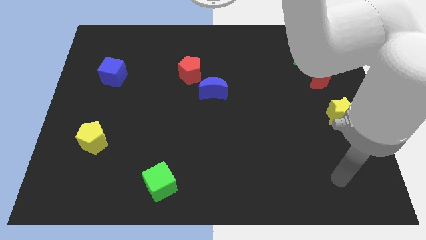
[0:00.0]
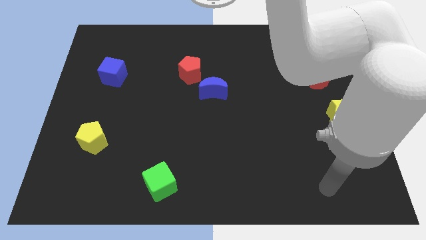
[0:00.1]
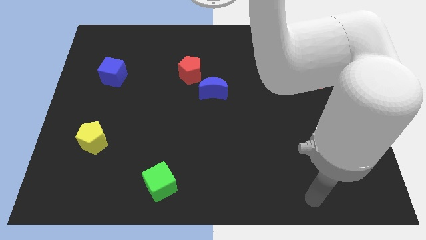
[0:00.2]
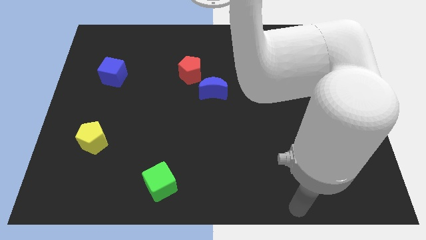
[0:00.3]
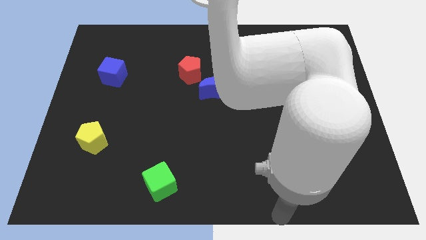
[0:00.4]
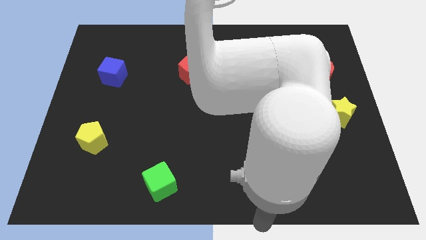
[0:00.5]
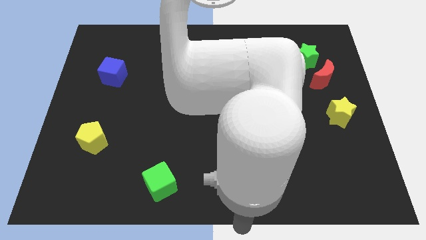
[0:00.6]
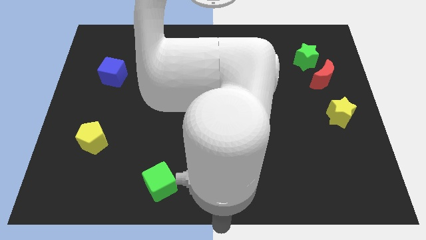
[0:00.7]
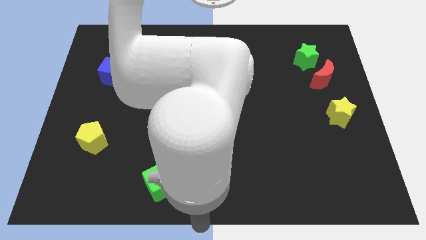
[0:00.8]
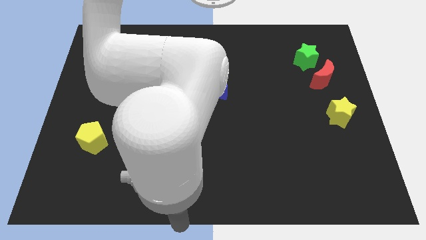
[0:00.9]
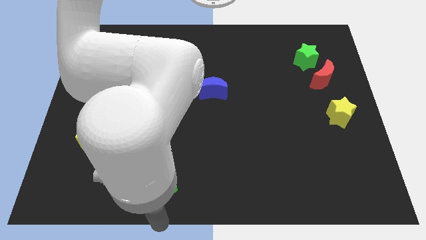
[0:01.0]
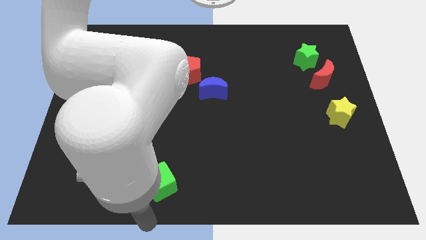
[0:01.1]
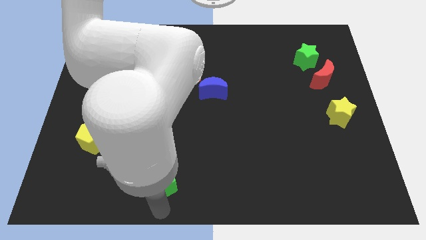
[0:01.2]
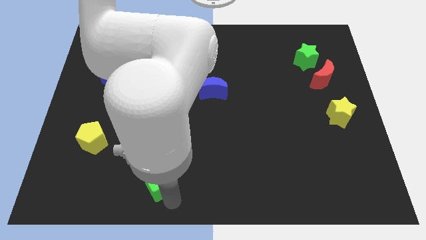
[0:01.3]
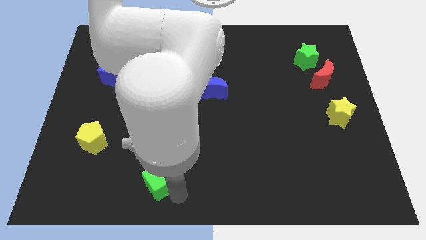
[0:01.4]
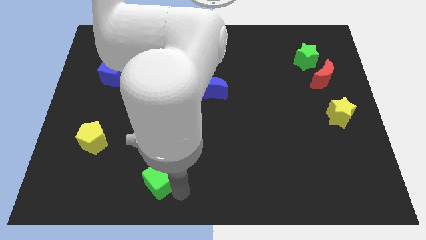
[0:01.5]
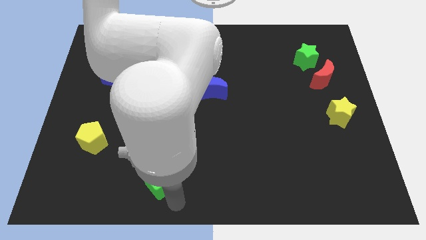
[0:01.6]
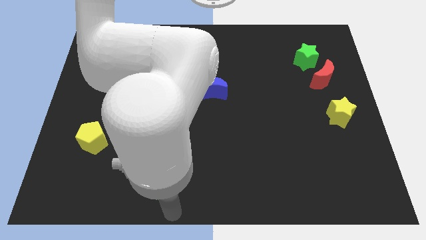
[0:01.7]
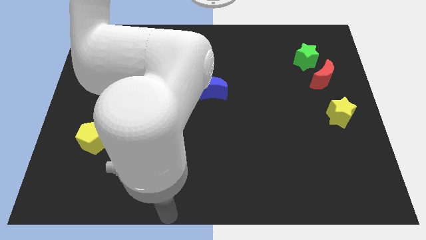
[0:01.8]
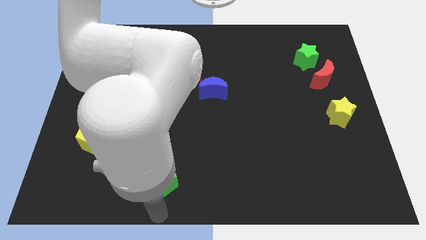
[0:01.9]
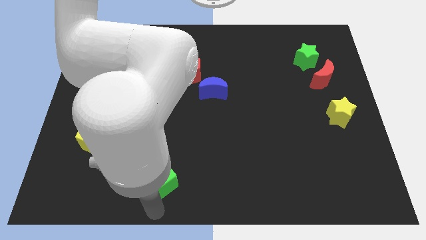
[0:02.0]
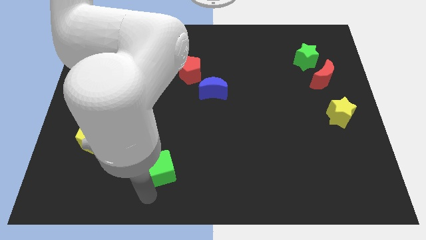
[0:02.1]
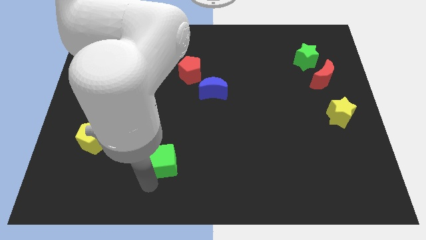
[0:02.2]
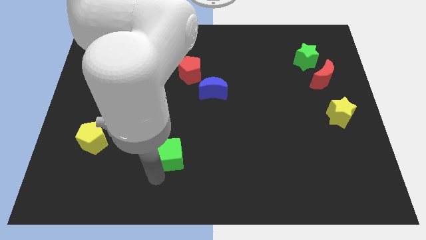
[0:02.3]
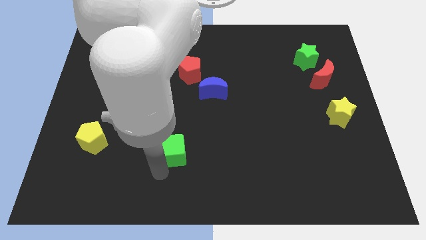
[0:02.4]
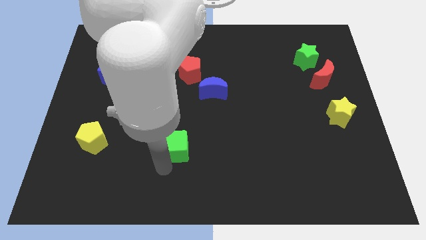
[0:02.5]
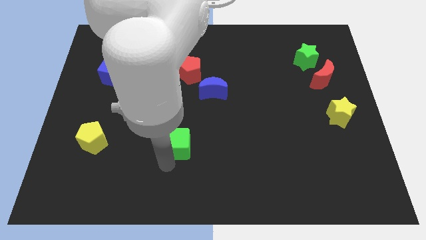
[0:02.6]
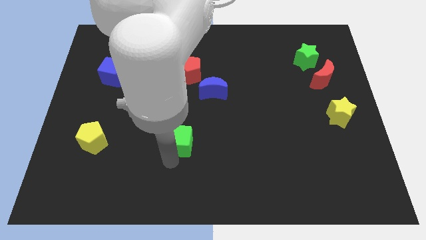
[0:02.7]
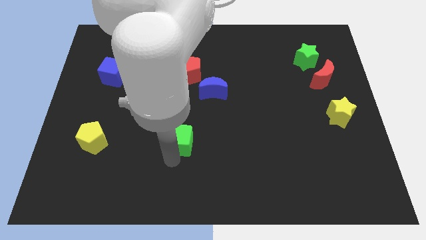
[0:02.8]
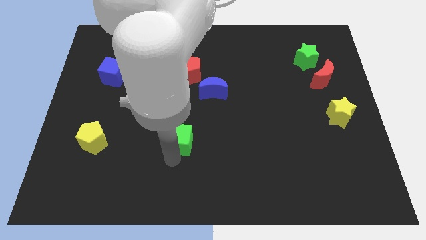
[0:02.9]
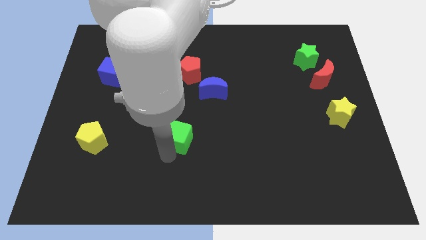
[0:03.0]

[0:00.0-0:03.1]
push green cube parallel to yellow pentagon

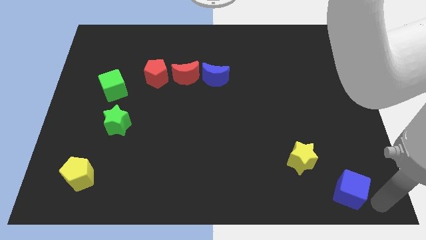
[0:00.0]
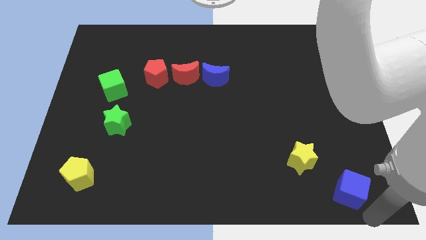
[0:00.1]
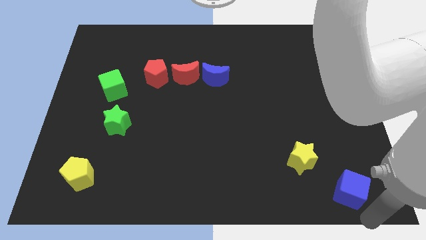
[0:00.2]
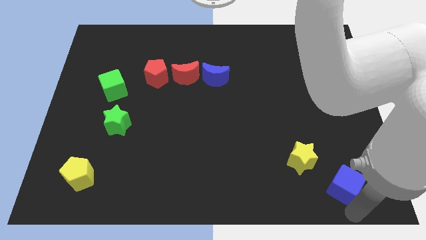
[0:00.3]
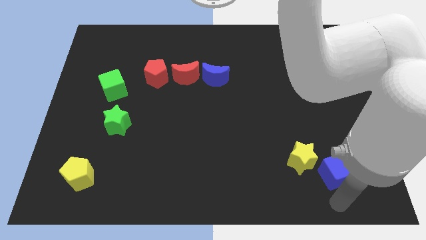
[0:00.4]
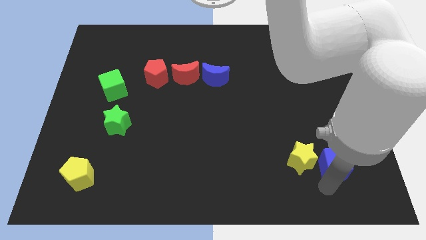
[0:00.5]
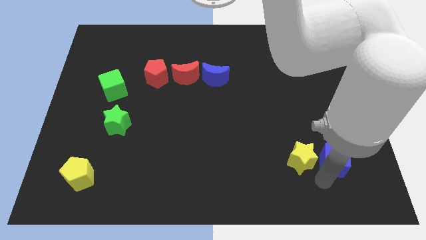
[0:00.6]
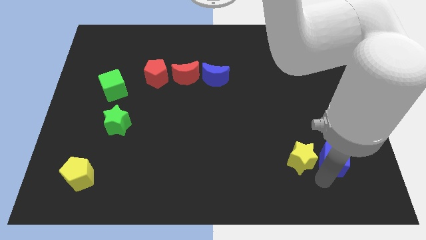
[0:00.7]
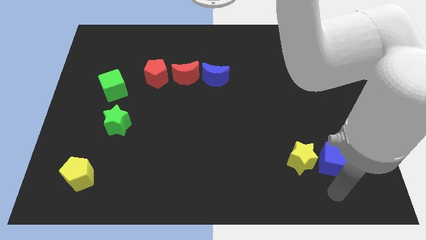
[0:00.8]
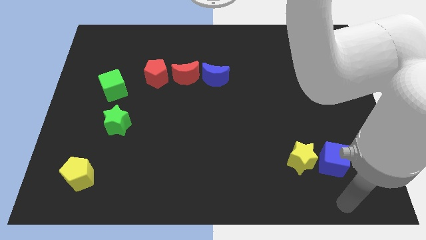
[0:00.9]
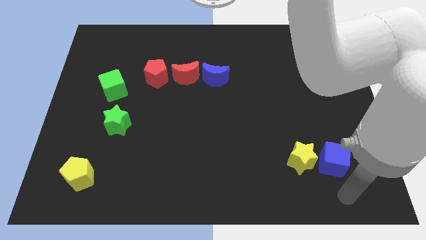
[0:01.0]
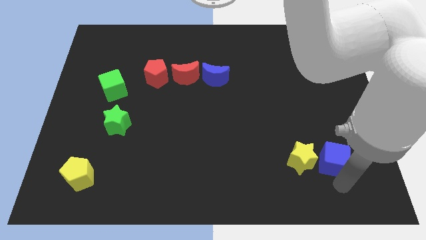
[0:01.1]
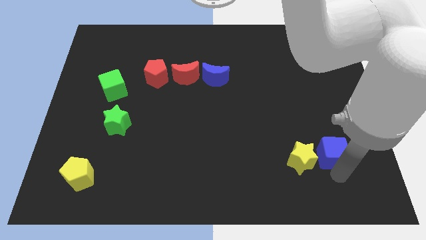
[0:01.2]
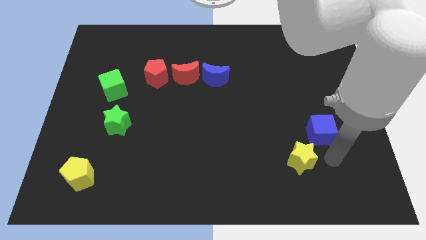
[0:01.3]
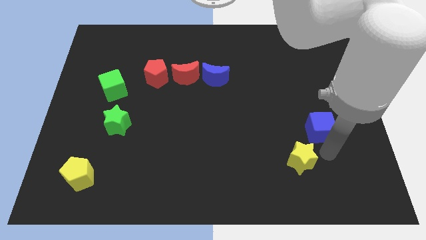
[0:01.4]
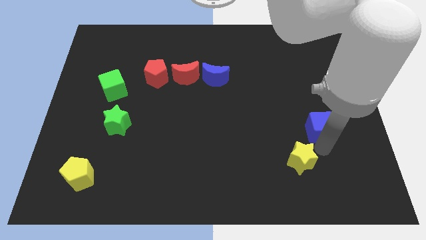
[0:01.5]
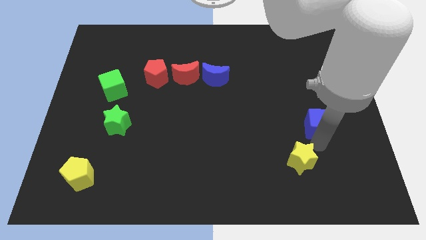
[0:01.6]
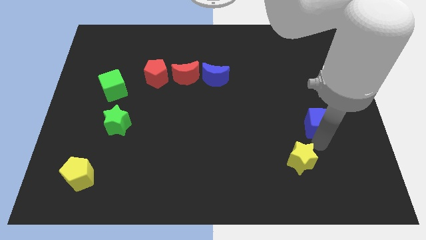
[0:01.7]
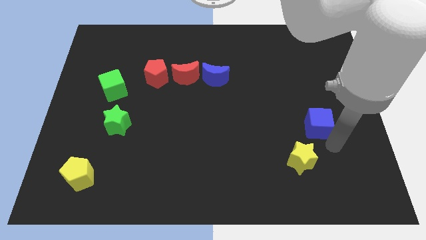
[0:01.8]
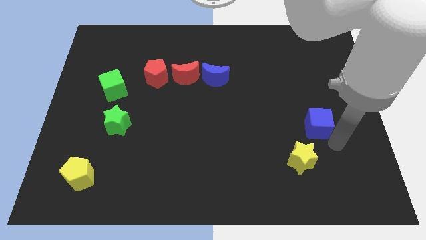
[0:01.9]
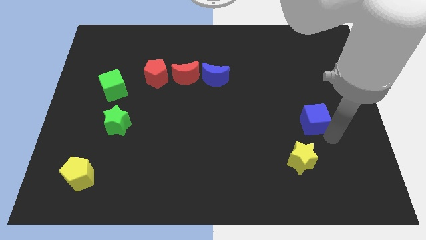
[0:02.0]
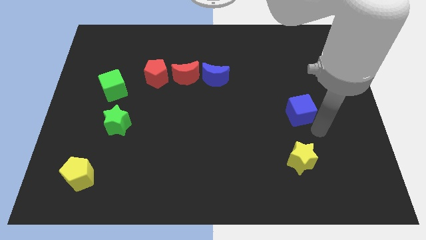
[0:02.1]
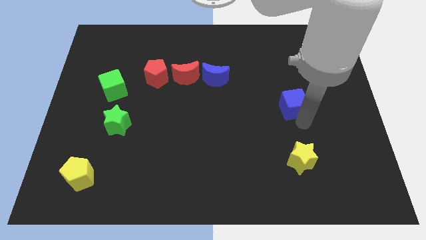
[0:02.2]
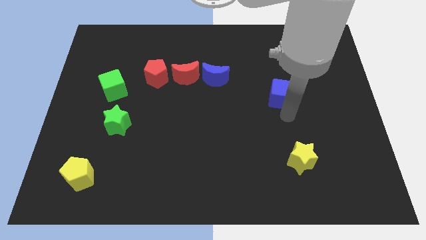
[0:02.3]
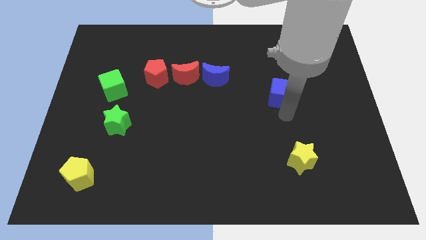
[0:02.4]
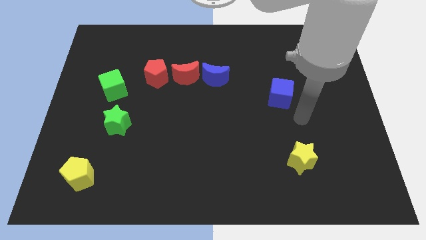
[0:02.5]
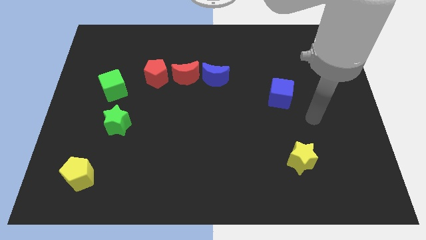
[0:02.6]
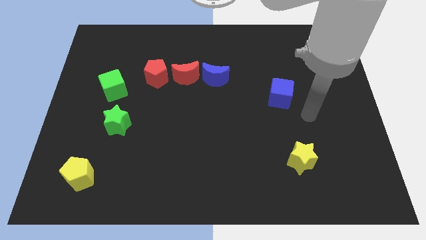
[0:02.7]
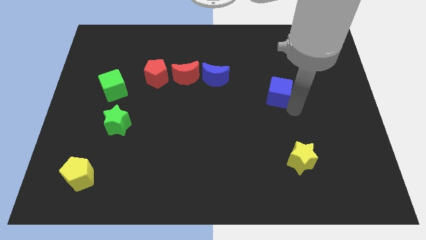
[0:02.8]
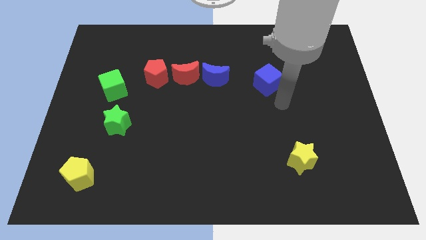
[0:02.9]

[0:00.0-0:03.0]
move the blue cube towards the blue crescent

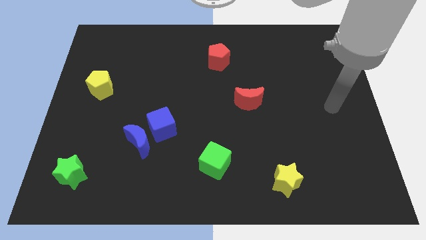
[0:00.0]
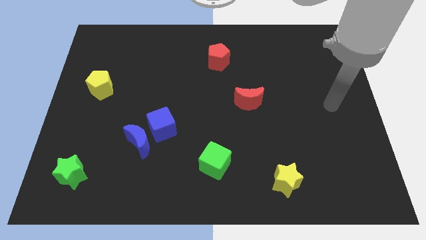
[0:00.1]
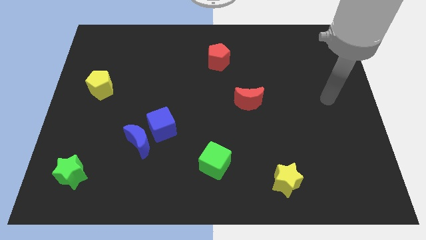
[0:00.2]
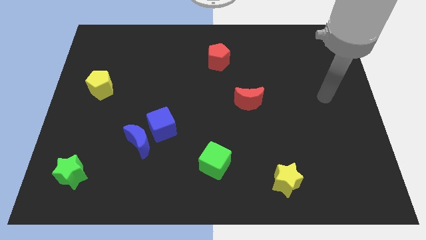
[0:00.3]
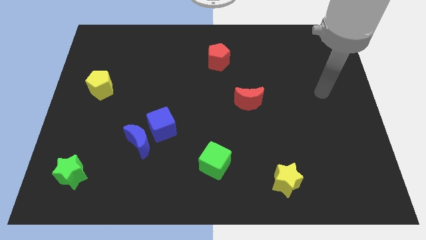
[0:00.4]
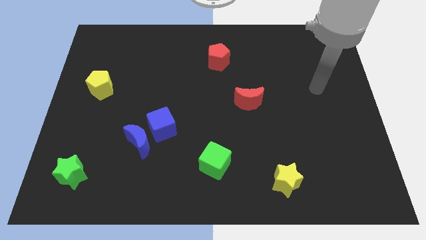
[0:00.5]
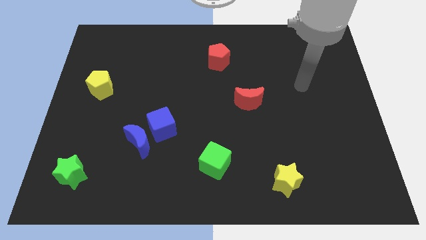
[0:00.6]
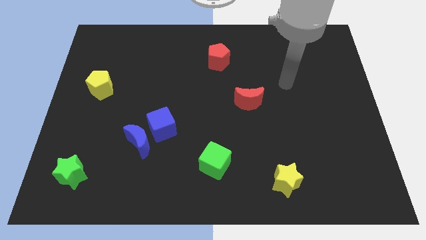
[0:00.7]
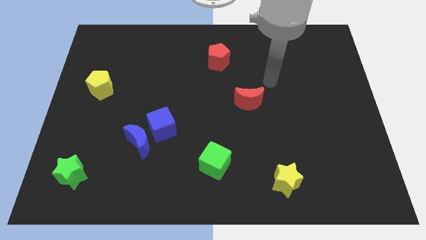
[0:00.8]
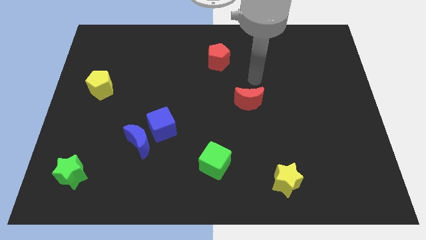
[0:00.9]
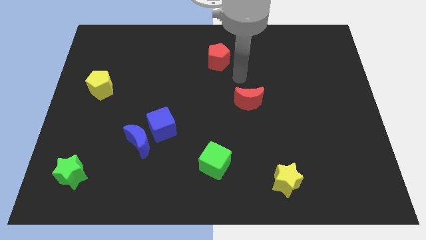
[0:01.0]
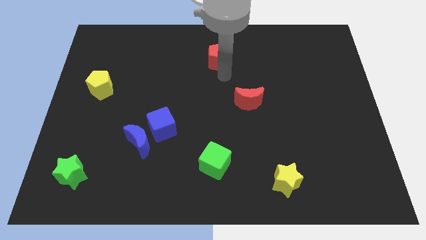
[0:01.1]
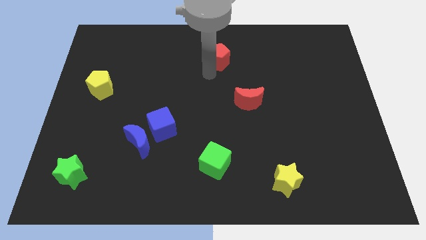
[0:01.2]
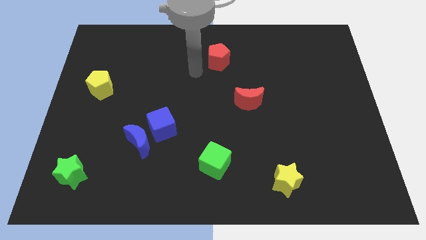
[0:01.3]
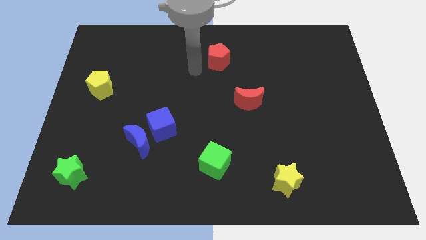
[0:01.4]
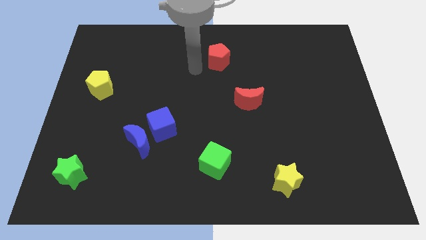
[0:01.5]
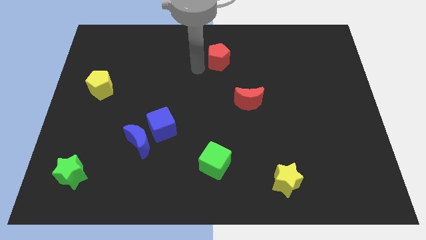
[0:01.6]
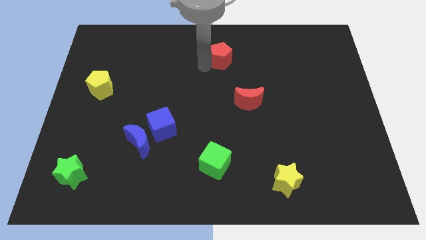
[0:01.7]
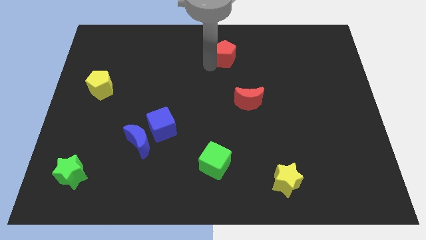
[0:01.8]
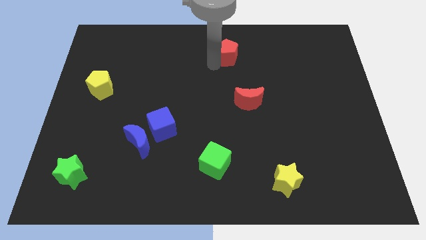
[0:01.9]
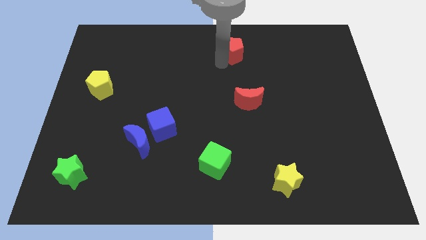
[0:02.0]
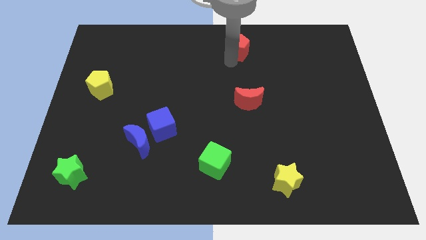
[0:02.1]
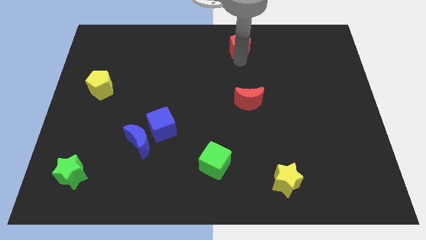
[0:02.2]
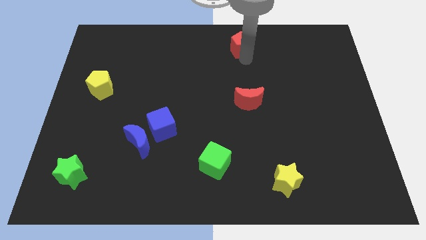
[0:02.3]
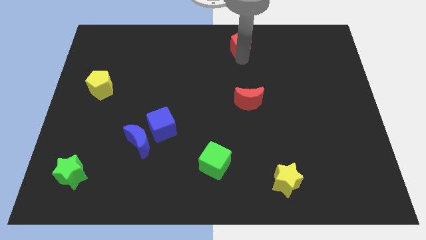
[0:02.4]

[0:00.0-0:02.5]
place the red pentagon vertically above the red crescent

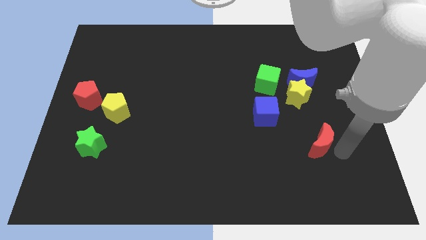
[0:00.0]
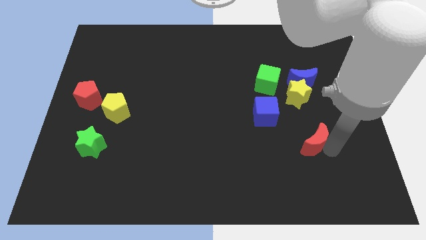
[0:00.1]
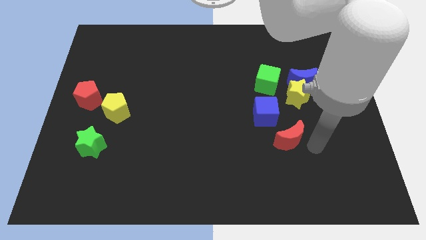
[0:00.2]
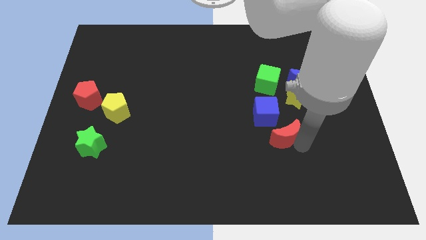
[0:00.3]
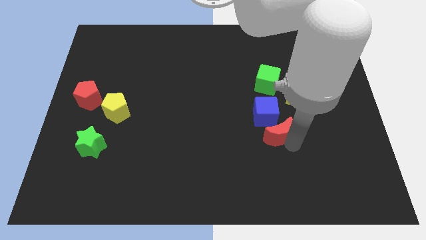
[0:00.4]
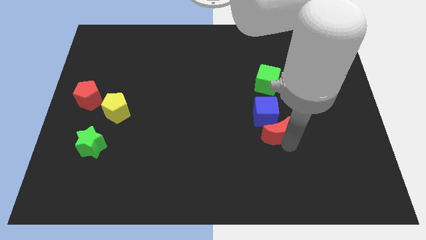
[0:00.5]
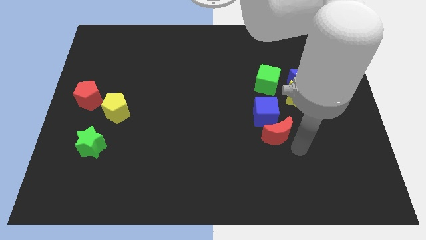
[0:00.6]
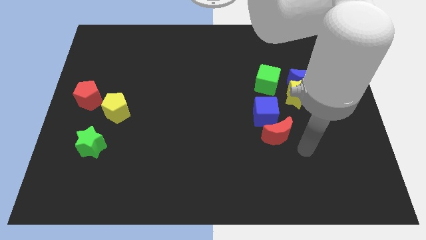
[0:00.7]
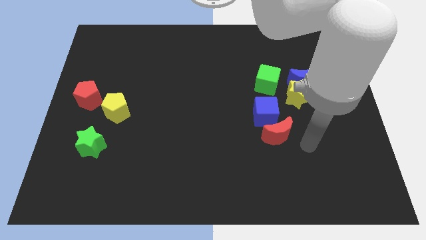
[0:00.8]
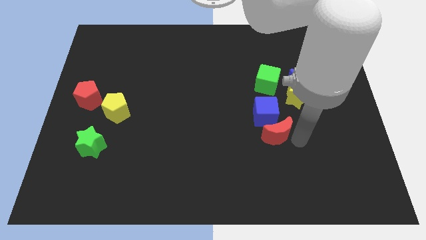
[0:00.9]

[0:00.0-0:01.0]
push the red moon below the blue cube
